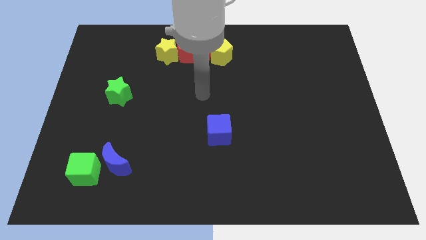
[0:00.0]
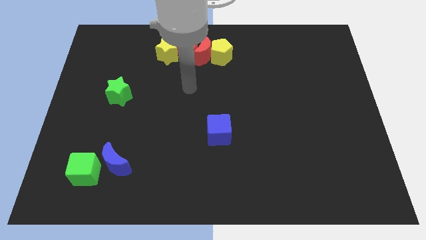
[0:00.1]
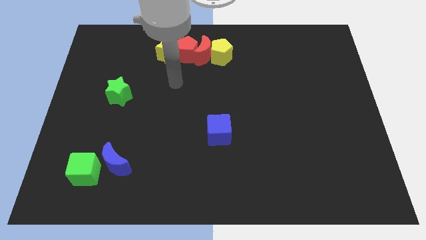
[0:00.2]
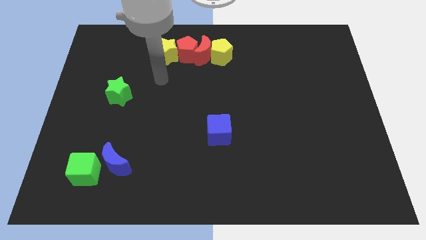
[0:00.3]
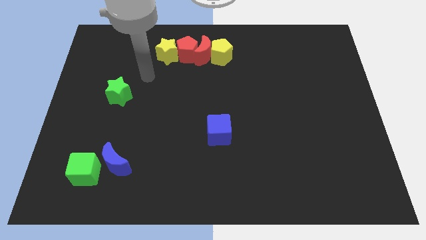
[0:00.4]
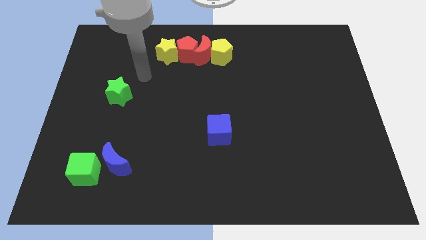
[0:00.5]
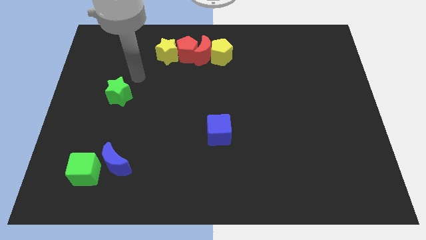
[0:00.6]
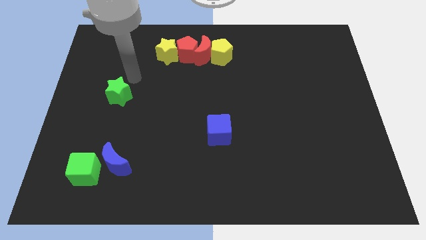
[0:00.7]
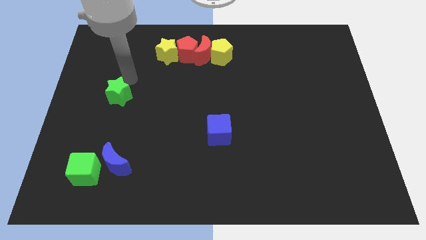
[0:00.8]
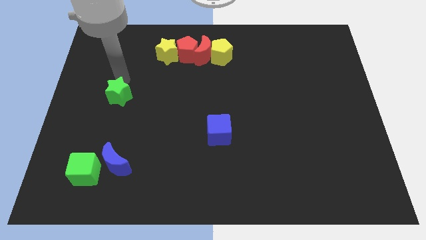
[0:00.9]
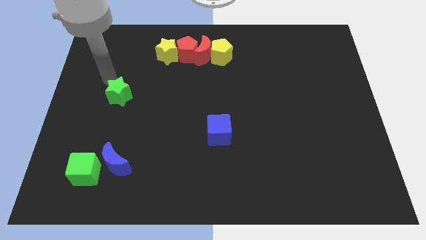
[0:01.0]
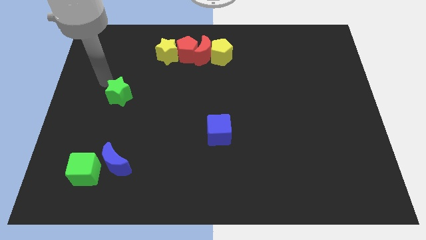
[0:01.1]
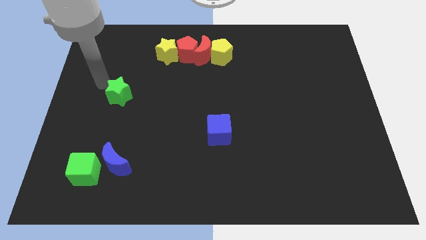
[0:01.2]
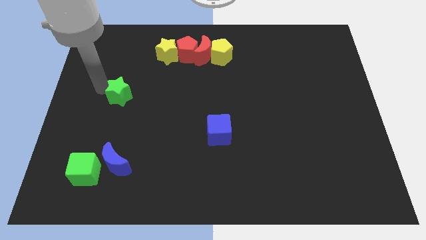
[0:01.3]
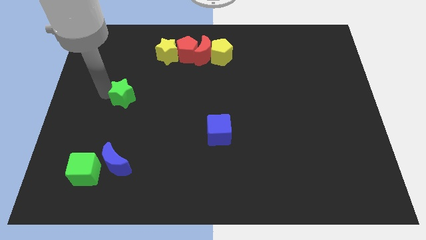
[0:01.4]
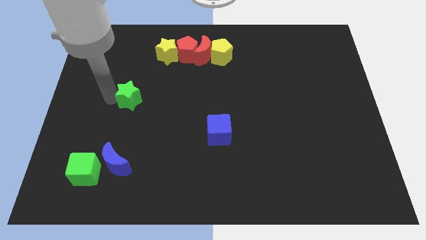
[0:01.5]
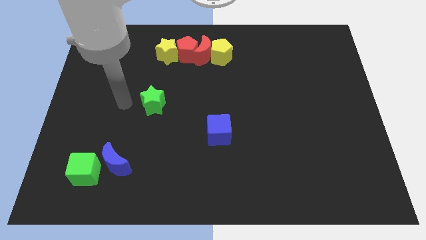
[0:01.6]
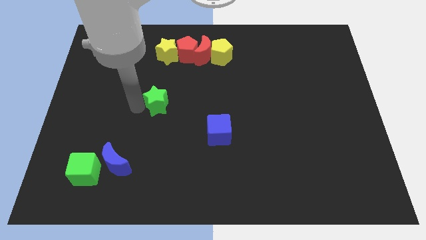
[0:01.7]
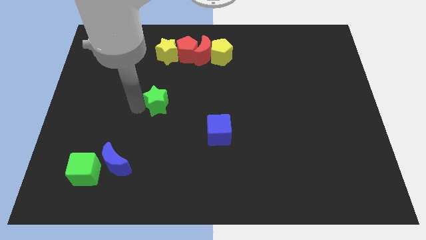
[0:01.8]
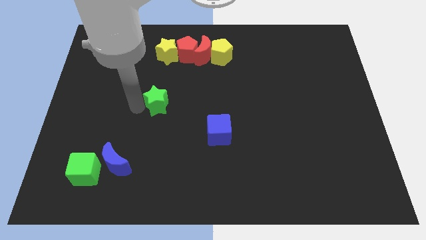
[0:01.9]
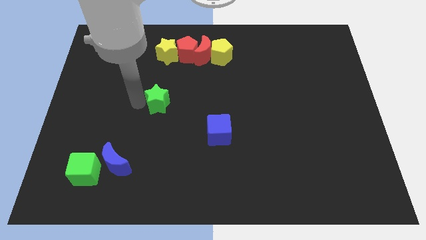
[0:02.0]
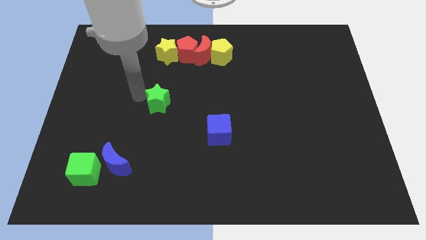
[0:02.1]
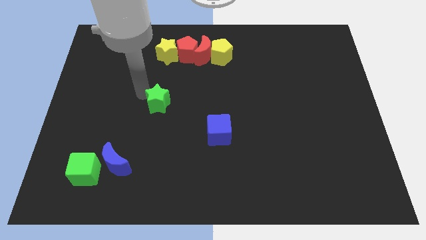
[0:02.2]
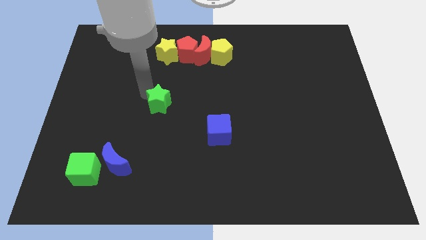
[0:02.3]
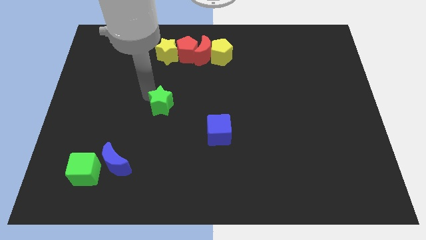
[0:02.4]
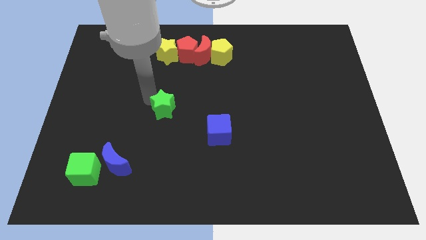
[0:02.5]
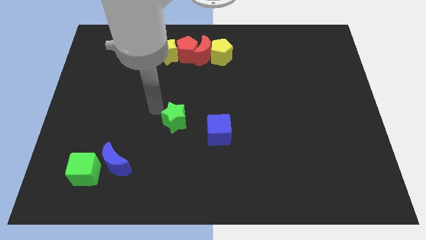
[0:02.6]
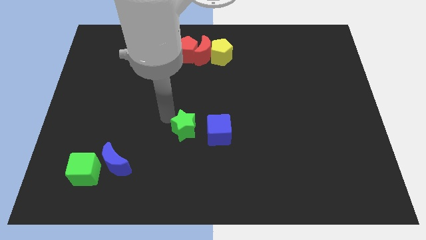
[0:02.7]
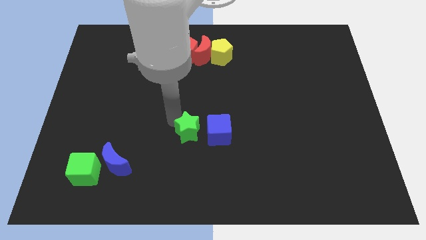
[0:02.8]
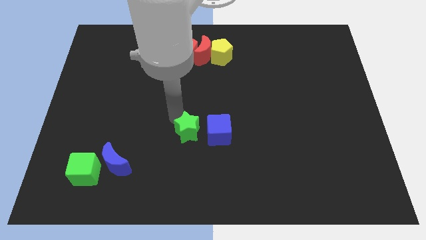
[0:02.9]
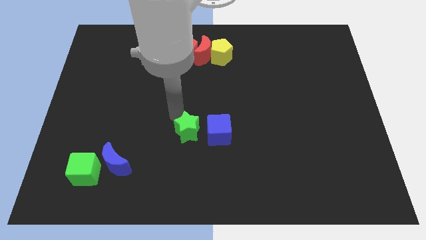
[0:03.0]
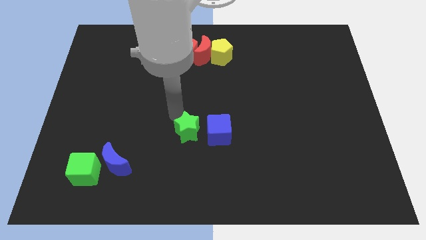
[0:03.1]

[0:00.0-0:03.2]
move green star towards blue cube

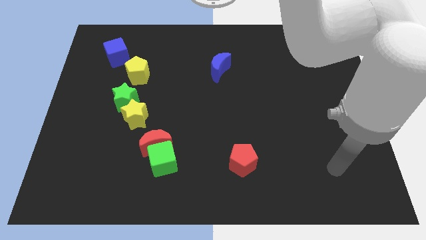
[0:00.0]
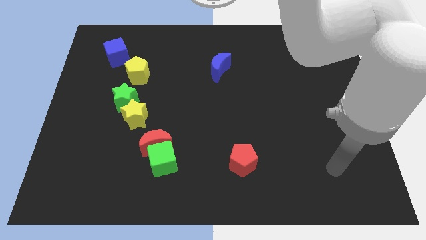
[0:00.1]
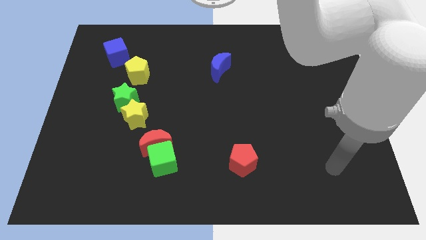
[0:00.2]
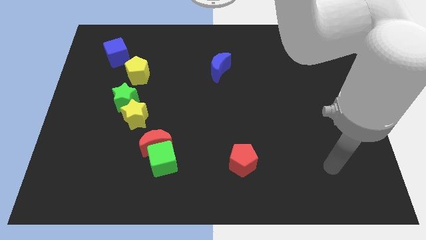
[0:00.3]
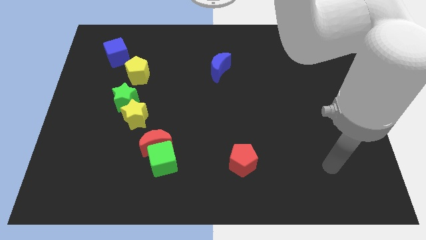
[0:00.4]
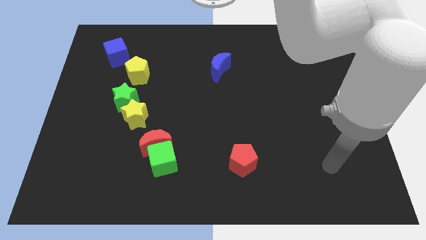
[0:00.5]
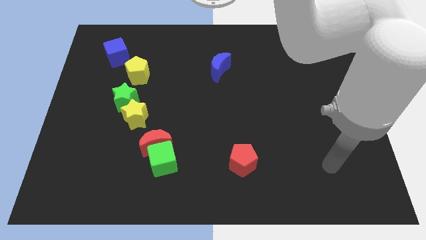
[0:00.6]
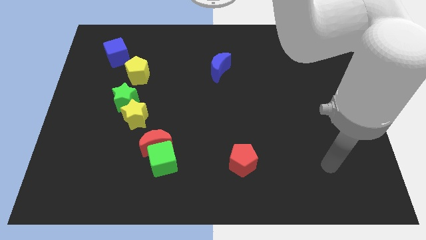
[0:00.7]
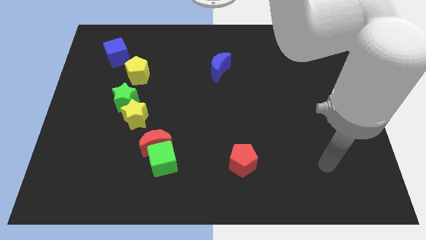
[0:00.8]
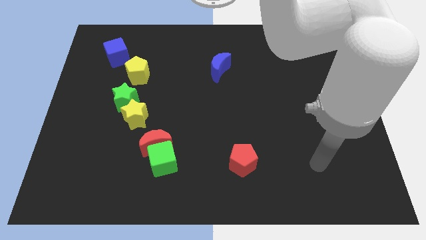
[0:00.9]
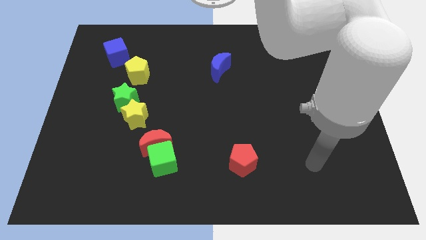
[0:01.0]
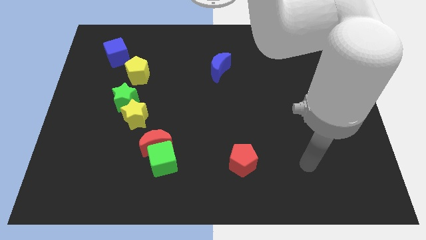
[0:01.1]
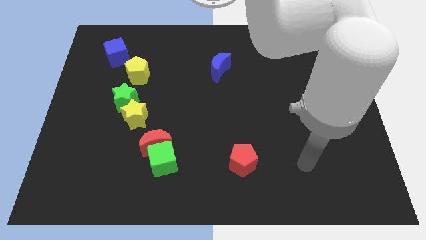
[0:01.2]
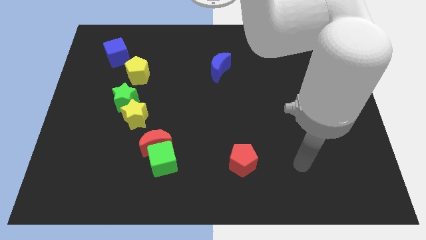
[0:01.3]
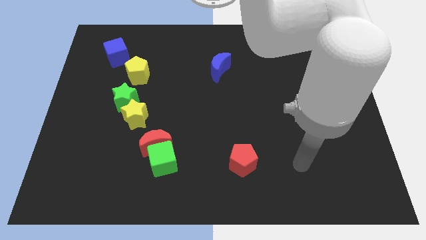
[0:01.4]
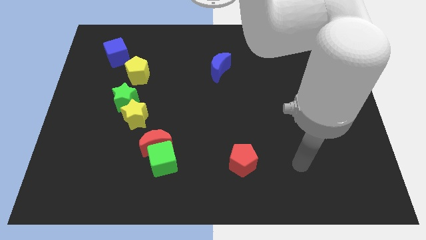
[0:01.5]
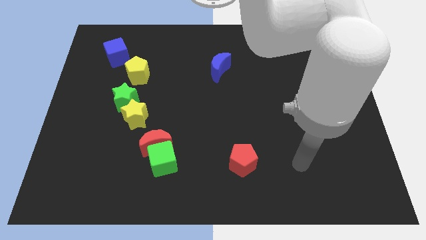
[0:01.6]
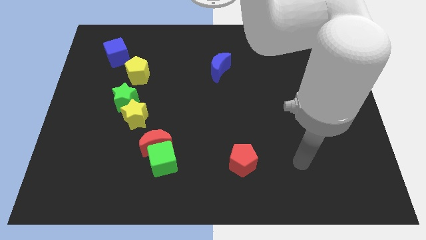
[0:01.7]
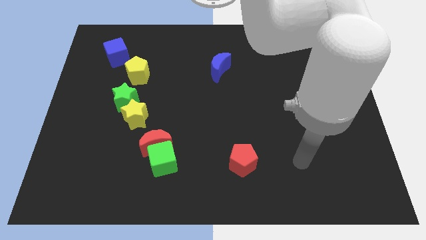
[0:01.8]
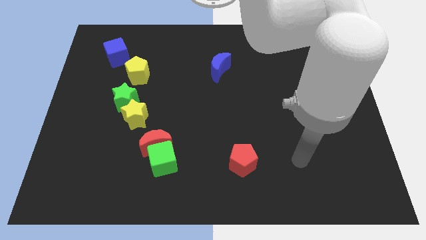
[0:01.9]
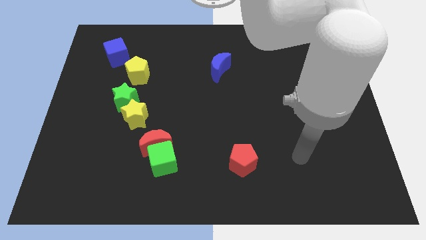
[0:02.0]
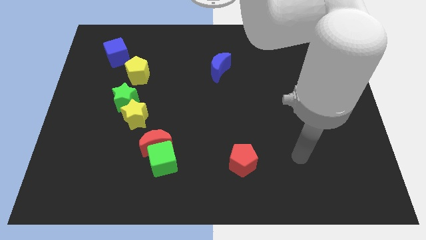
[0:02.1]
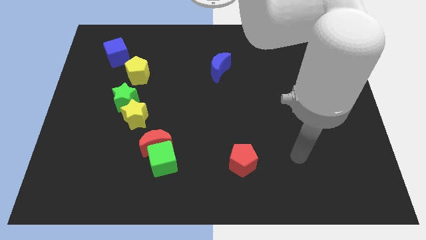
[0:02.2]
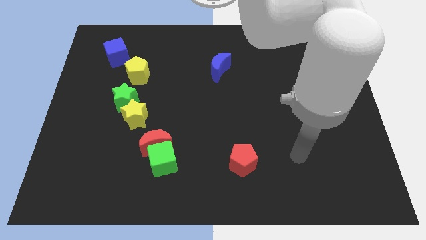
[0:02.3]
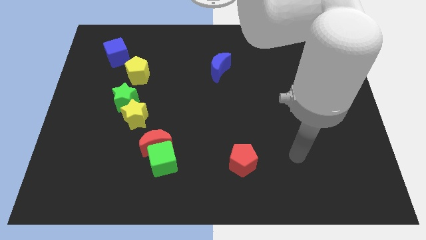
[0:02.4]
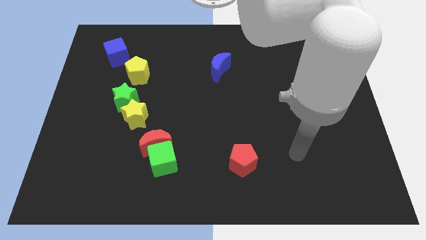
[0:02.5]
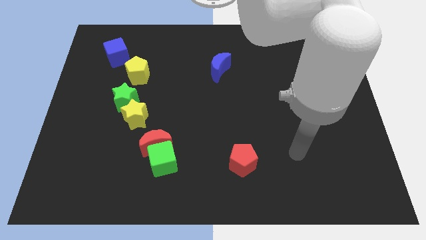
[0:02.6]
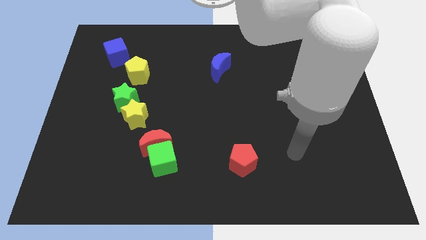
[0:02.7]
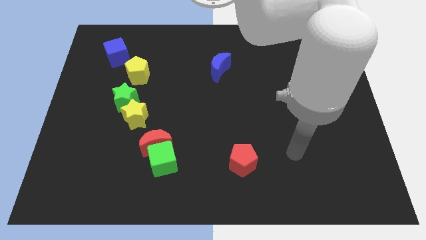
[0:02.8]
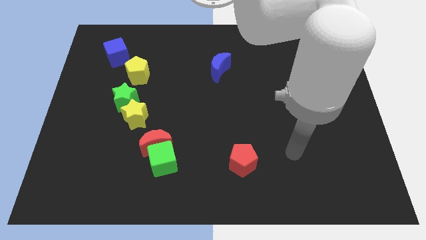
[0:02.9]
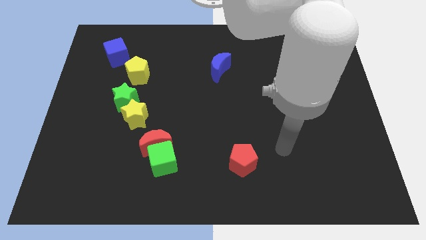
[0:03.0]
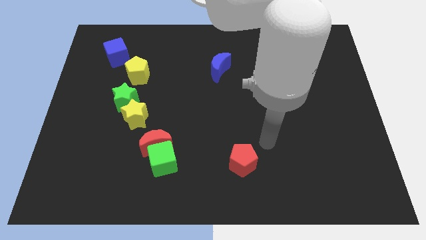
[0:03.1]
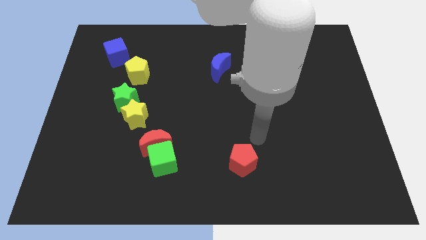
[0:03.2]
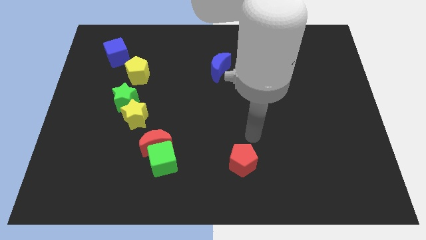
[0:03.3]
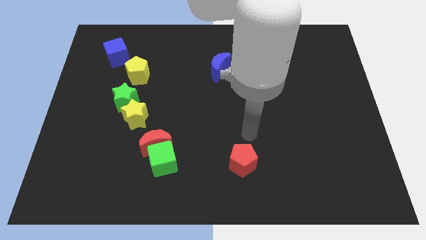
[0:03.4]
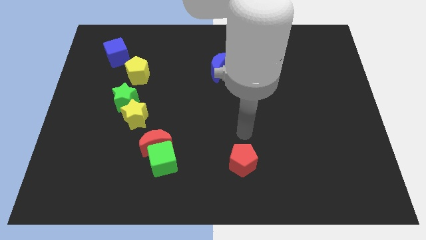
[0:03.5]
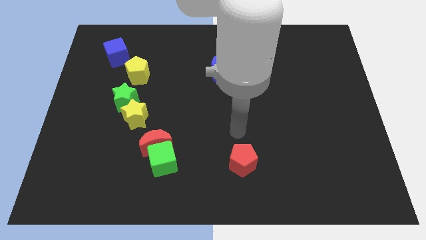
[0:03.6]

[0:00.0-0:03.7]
move the arm to the top of the red pentagon

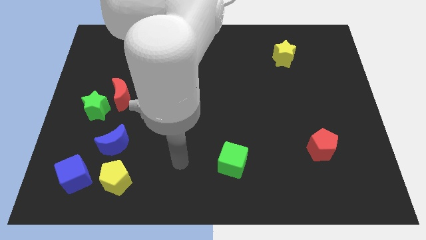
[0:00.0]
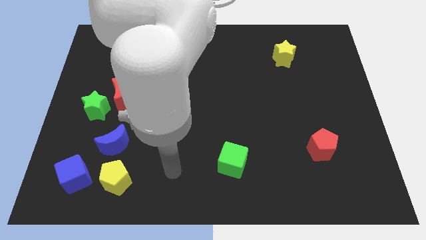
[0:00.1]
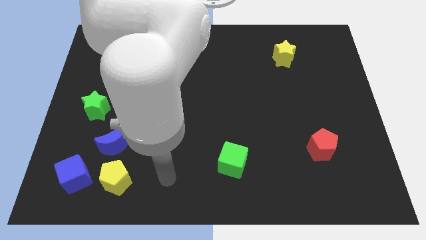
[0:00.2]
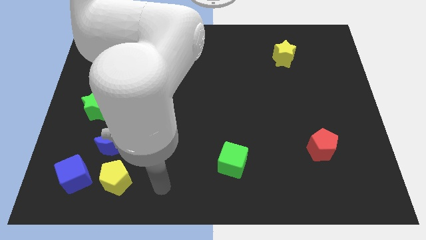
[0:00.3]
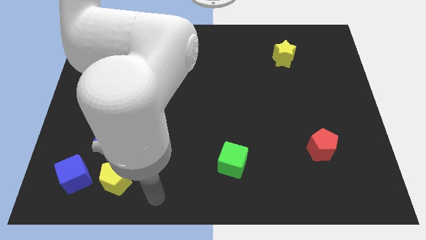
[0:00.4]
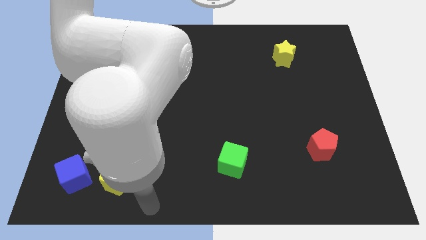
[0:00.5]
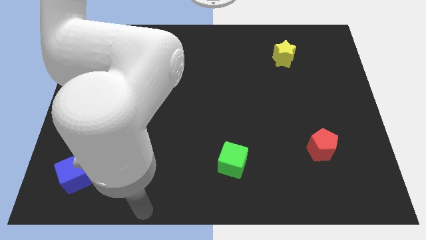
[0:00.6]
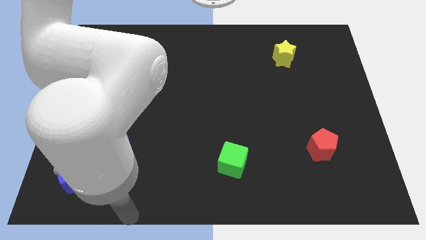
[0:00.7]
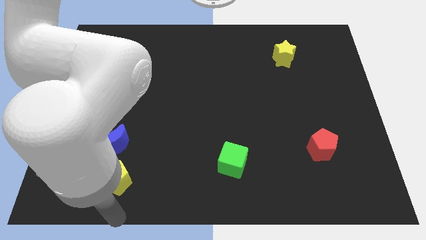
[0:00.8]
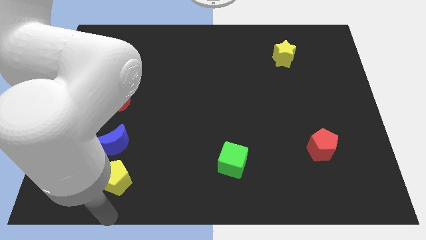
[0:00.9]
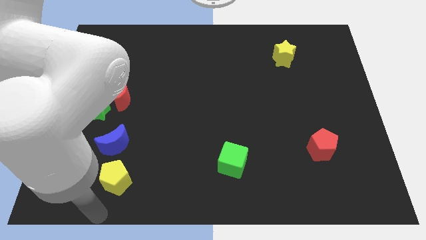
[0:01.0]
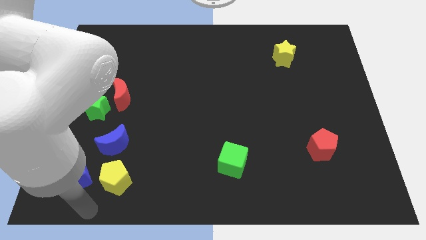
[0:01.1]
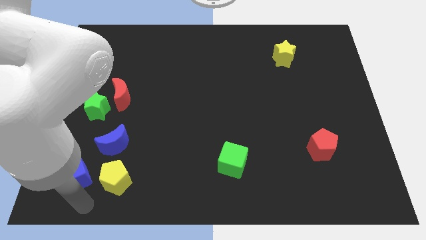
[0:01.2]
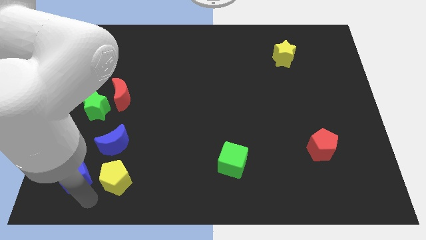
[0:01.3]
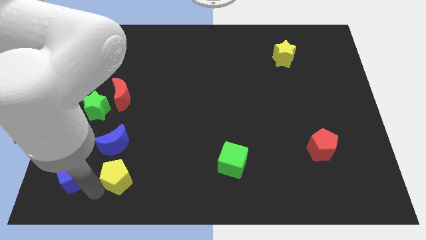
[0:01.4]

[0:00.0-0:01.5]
move the arm towards the bottom of the yellow pentagon

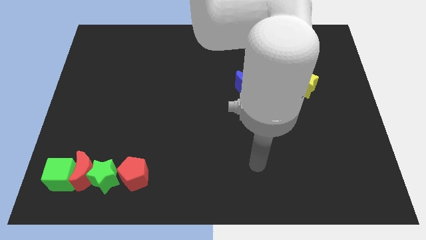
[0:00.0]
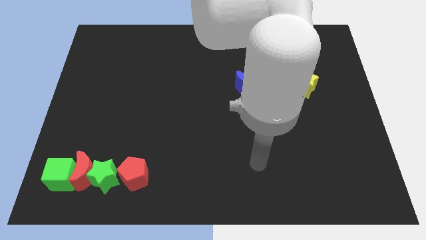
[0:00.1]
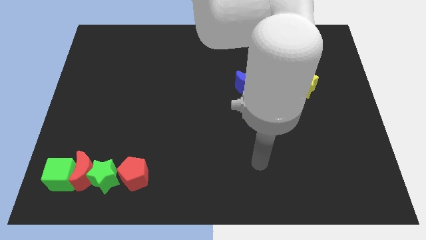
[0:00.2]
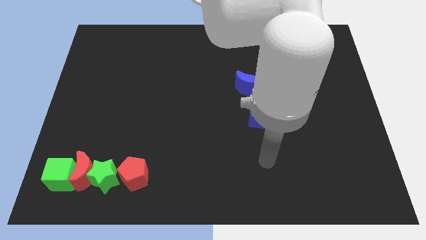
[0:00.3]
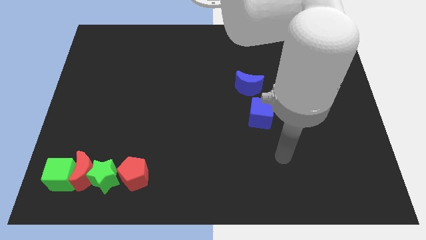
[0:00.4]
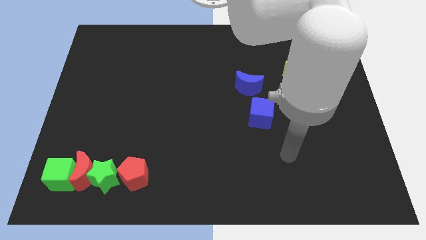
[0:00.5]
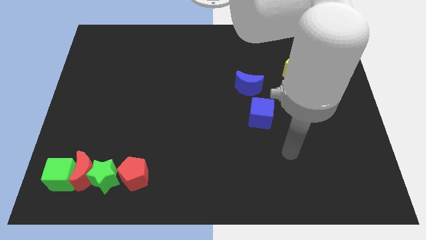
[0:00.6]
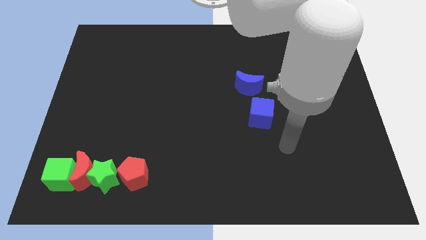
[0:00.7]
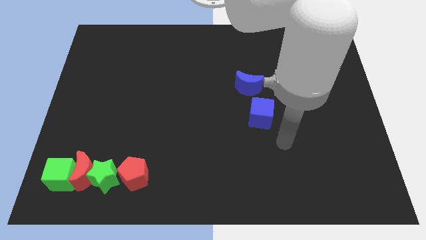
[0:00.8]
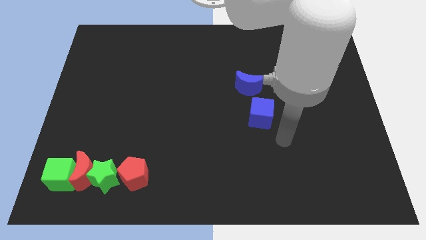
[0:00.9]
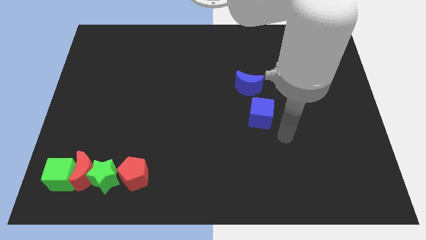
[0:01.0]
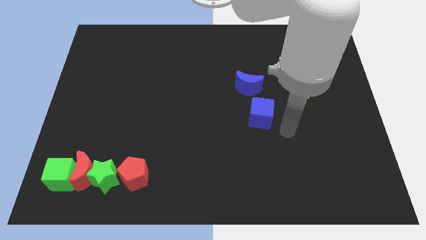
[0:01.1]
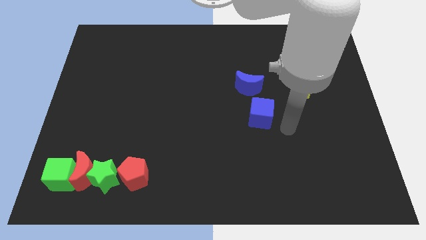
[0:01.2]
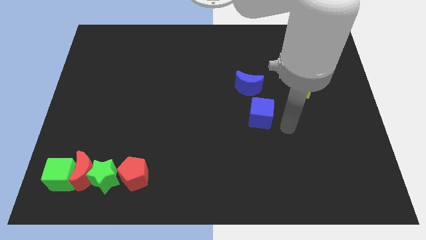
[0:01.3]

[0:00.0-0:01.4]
move your arm to the bottom right of the blue cube
